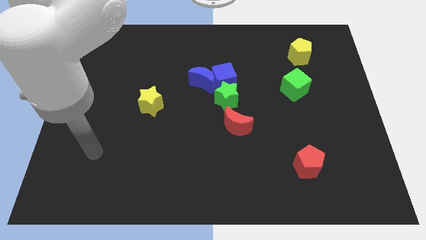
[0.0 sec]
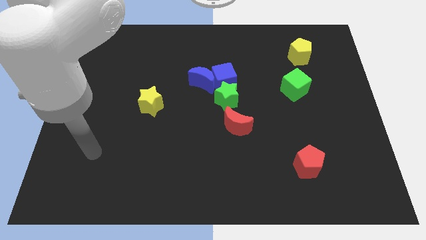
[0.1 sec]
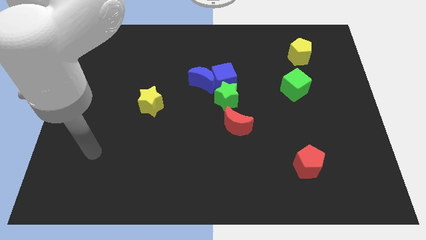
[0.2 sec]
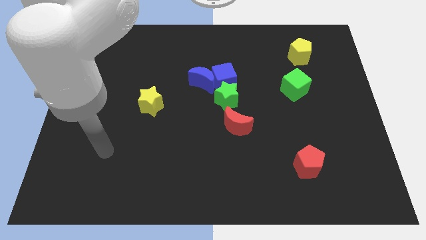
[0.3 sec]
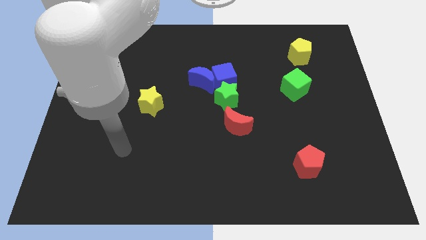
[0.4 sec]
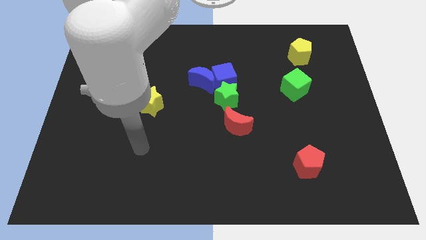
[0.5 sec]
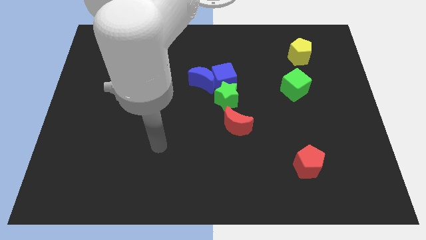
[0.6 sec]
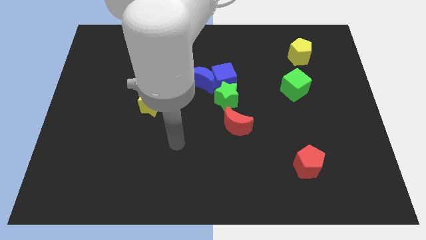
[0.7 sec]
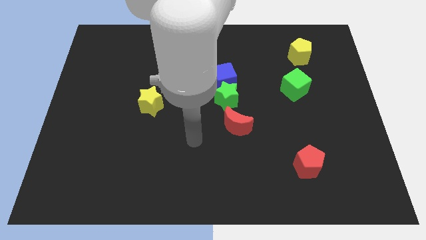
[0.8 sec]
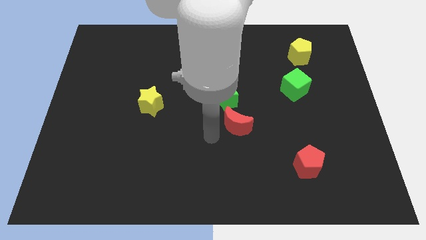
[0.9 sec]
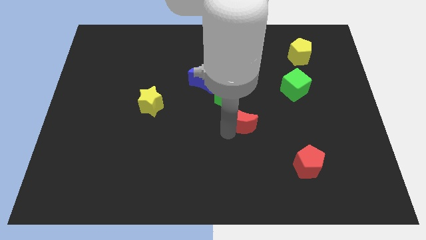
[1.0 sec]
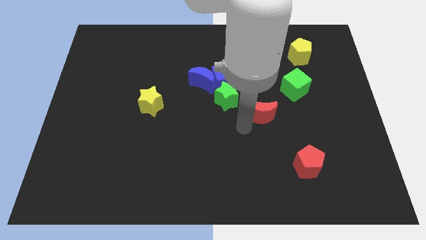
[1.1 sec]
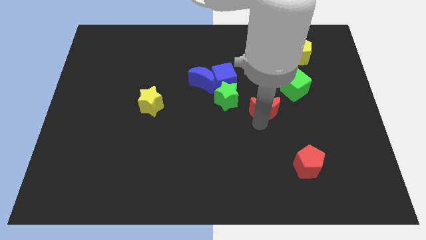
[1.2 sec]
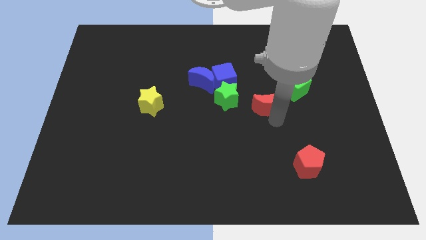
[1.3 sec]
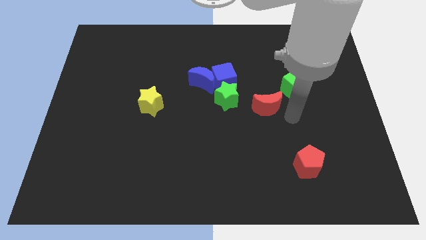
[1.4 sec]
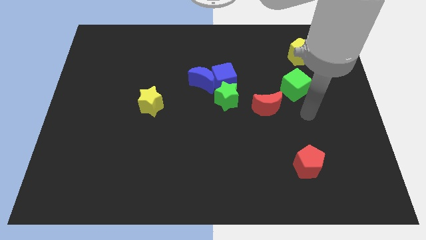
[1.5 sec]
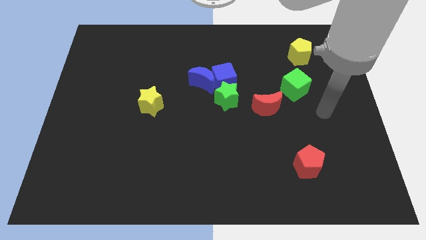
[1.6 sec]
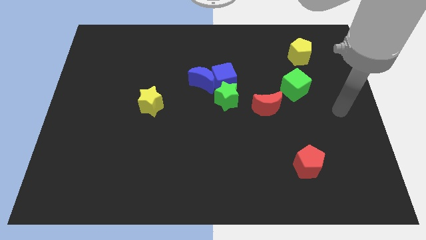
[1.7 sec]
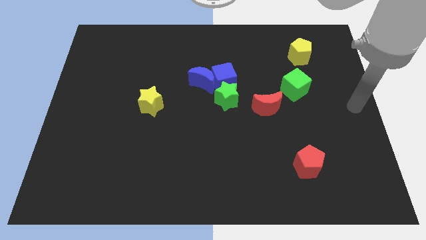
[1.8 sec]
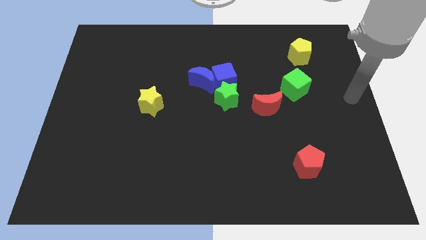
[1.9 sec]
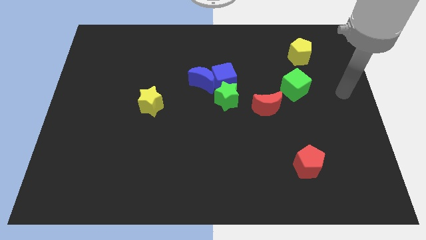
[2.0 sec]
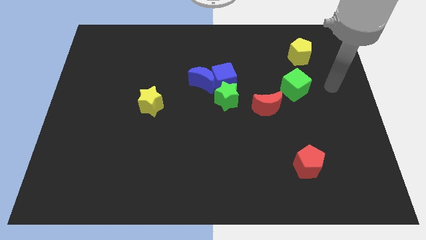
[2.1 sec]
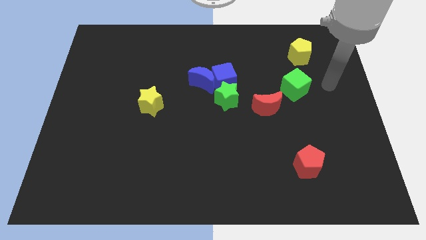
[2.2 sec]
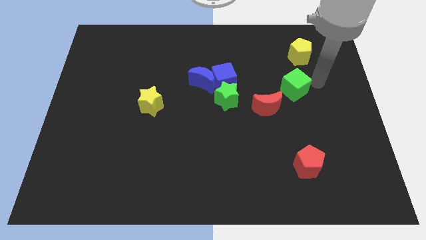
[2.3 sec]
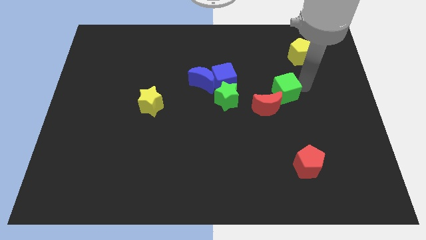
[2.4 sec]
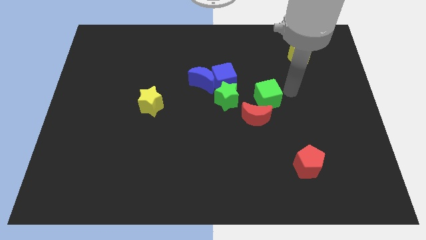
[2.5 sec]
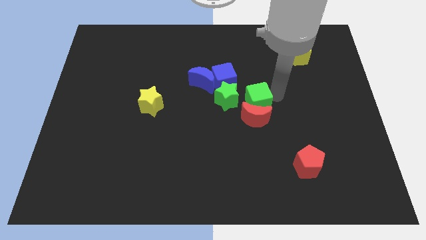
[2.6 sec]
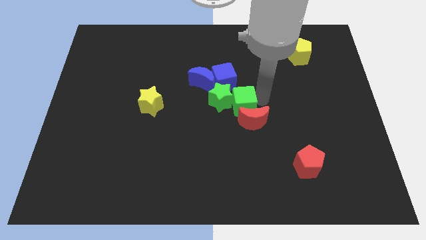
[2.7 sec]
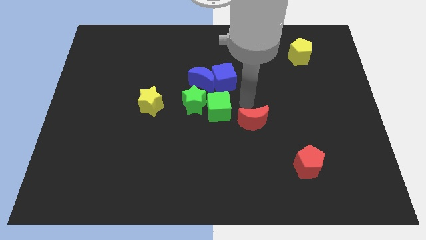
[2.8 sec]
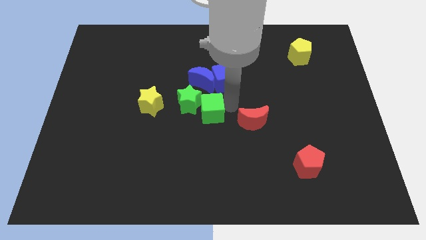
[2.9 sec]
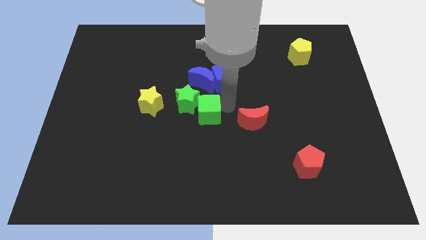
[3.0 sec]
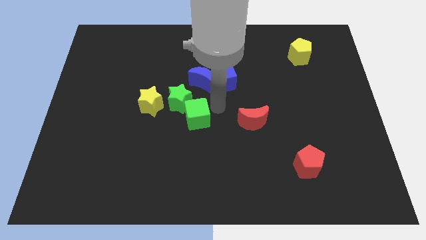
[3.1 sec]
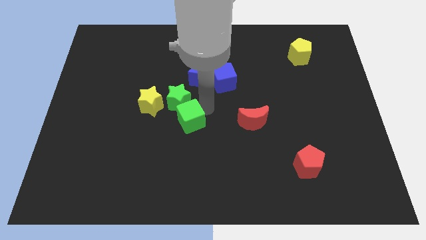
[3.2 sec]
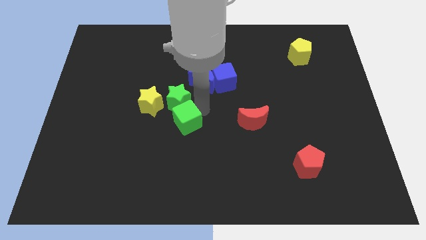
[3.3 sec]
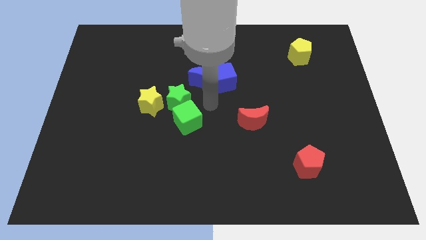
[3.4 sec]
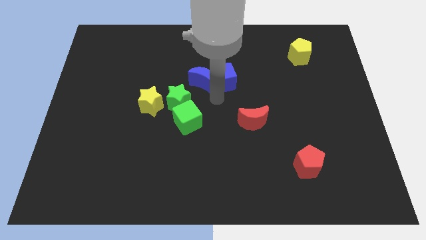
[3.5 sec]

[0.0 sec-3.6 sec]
place the green cube below the green star

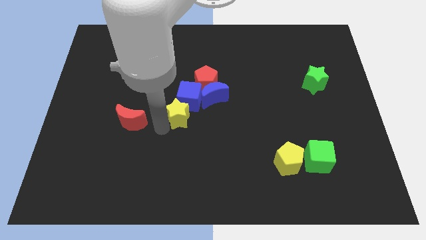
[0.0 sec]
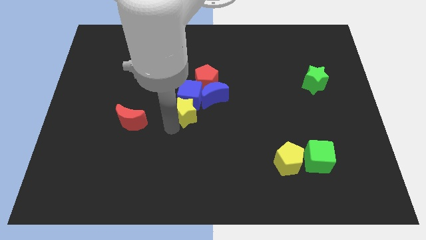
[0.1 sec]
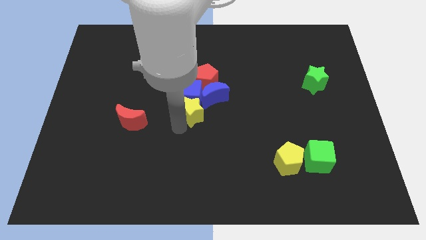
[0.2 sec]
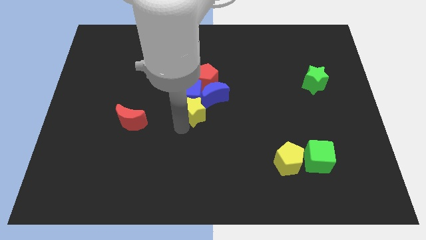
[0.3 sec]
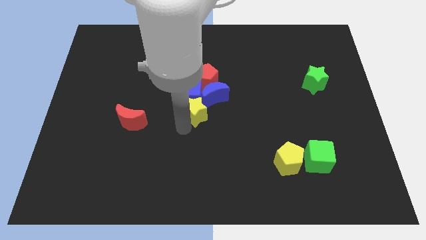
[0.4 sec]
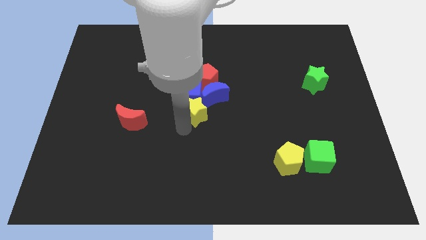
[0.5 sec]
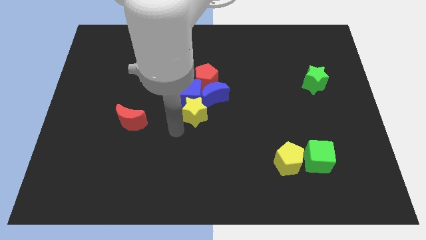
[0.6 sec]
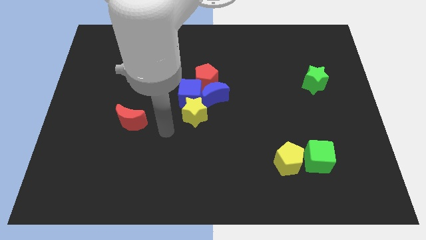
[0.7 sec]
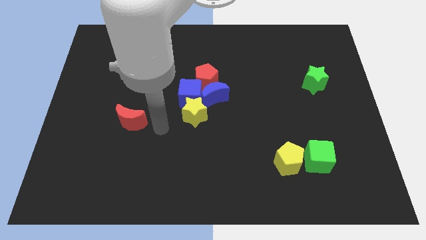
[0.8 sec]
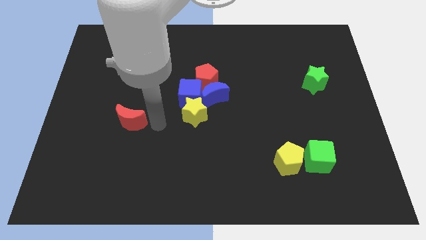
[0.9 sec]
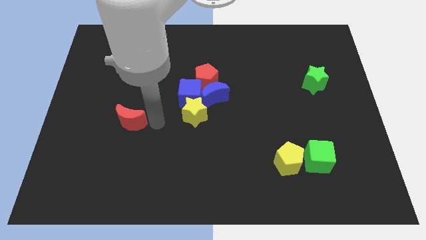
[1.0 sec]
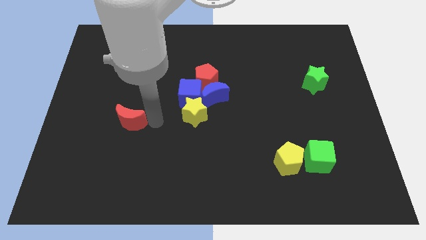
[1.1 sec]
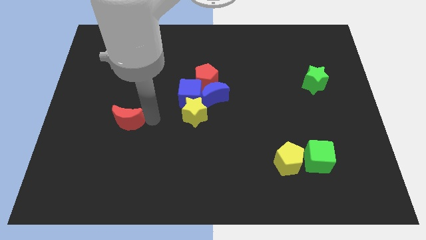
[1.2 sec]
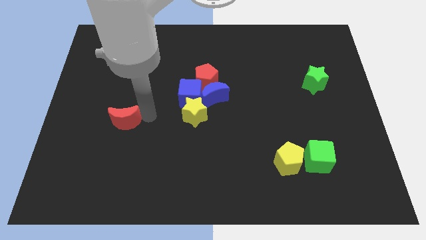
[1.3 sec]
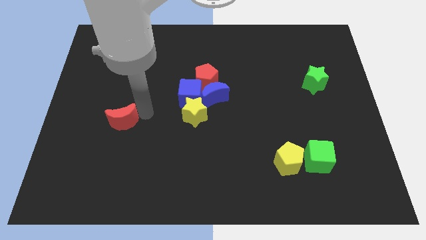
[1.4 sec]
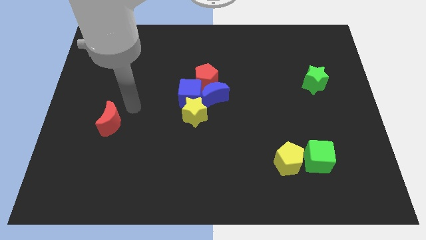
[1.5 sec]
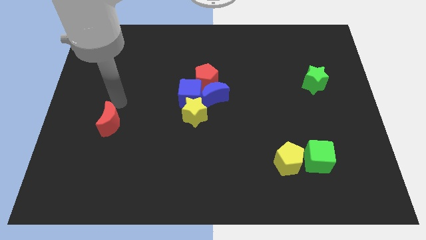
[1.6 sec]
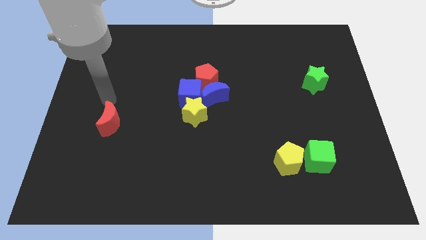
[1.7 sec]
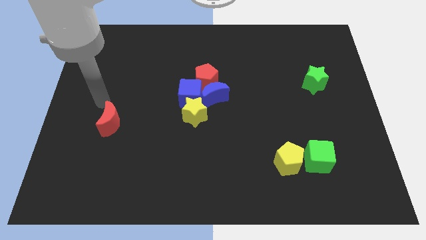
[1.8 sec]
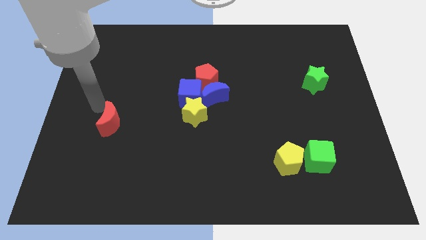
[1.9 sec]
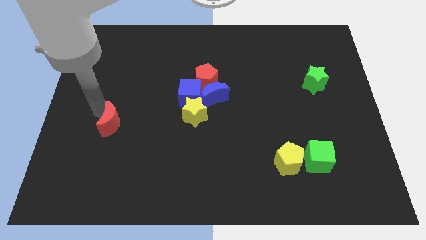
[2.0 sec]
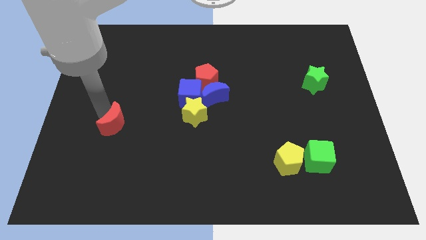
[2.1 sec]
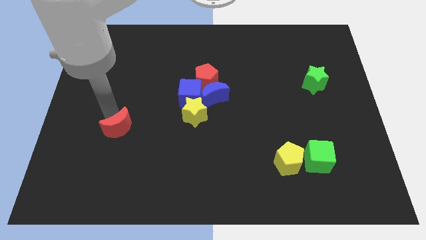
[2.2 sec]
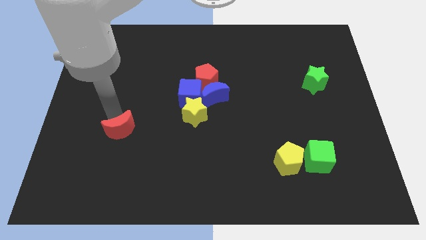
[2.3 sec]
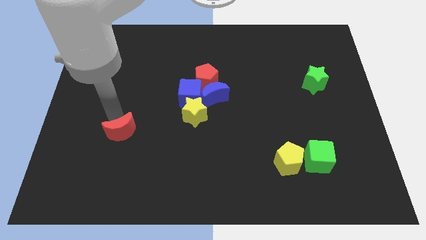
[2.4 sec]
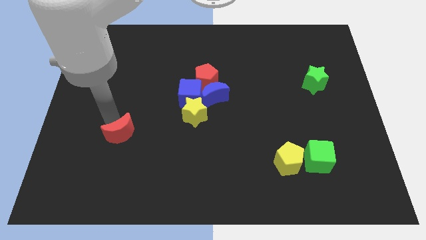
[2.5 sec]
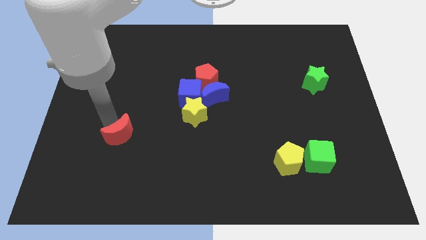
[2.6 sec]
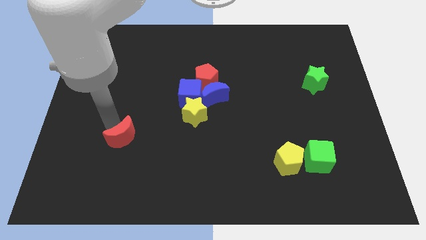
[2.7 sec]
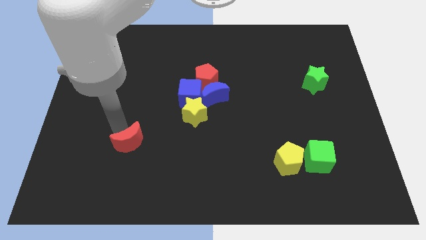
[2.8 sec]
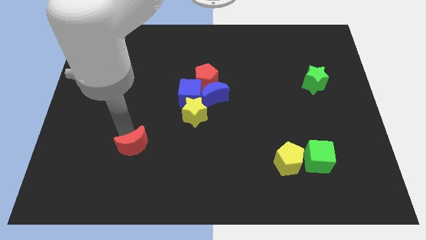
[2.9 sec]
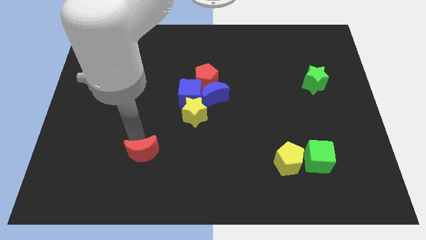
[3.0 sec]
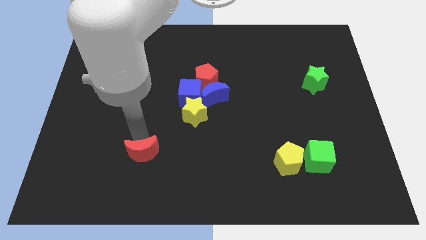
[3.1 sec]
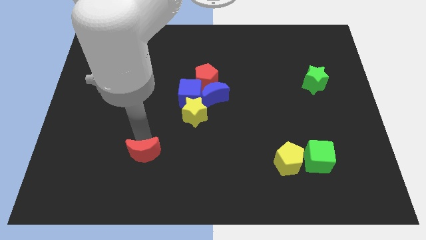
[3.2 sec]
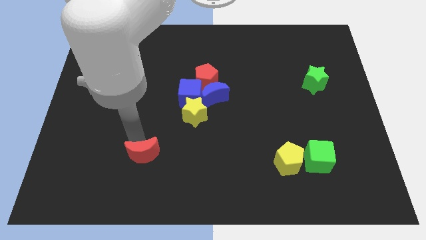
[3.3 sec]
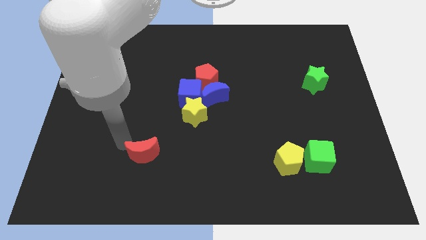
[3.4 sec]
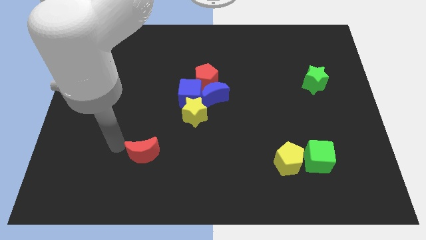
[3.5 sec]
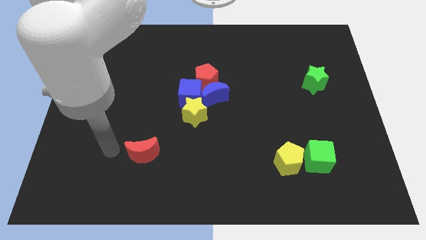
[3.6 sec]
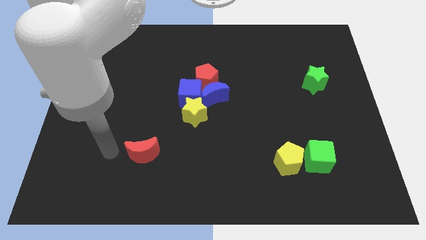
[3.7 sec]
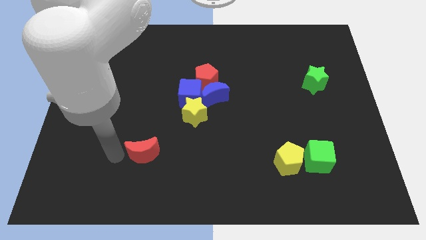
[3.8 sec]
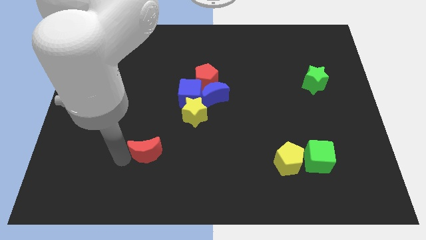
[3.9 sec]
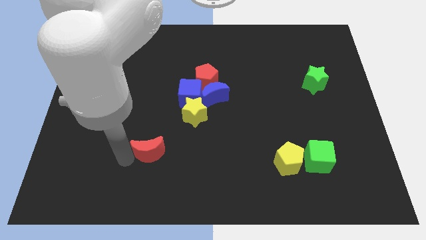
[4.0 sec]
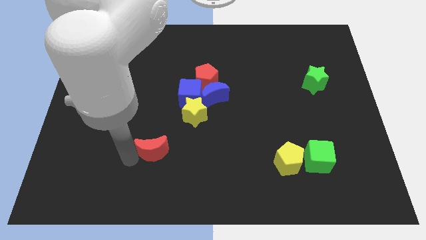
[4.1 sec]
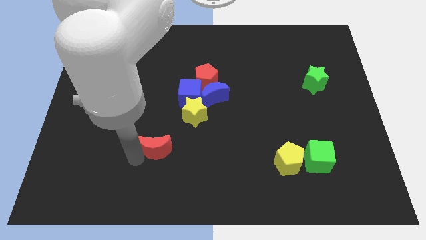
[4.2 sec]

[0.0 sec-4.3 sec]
push the red crescent towards the yellow star

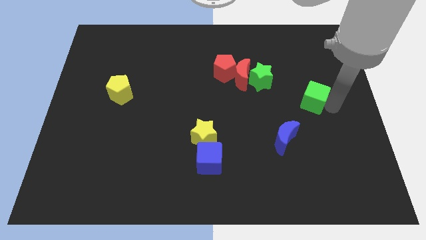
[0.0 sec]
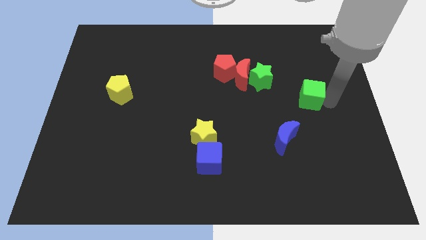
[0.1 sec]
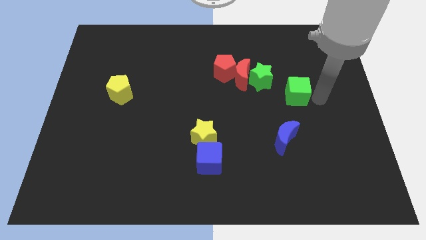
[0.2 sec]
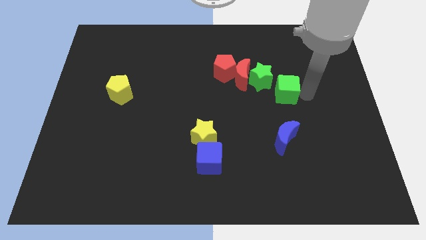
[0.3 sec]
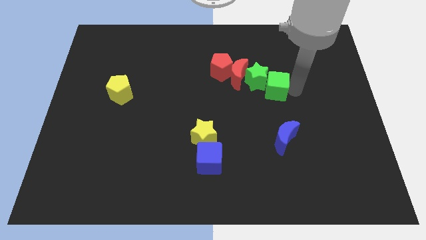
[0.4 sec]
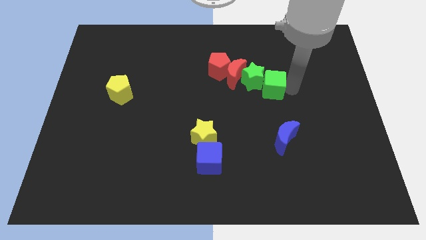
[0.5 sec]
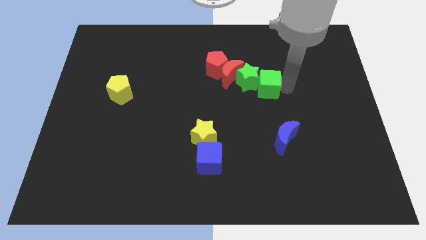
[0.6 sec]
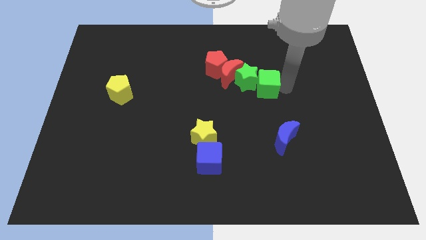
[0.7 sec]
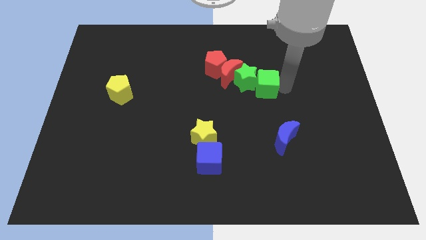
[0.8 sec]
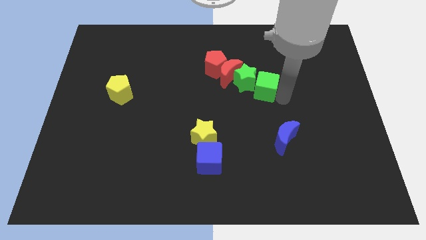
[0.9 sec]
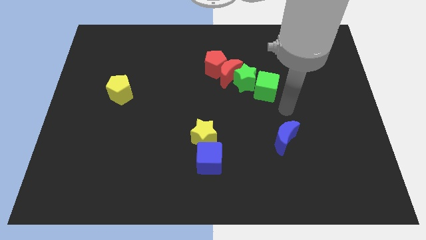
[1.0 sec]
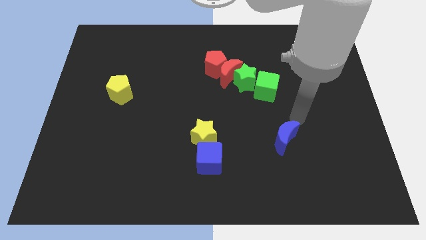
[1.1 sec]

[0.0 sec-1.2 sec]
put green cube into the green star
